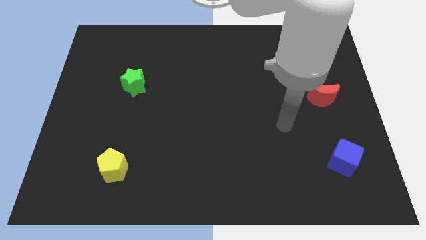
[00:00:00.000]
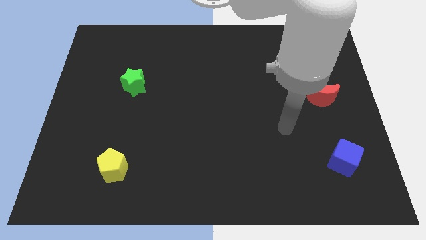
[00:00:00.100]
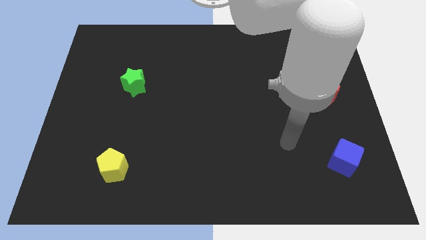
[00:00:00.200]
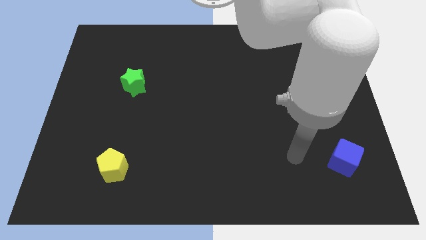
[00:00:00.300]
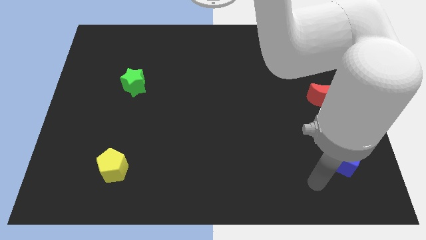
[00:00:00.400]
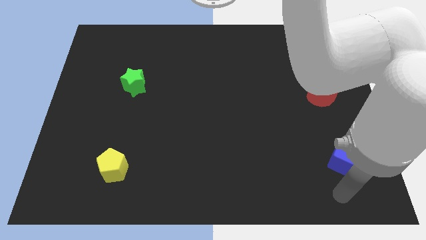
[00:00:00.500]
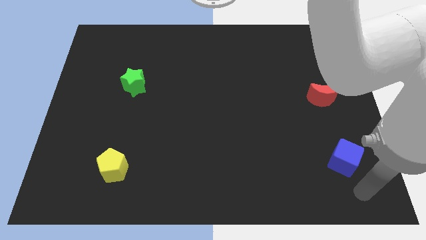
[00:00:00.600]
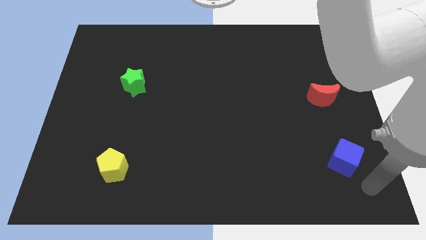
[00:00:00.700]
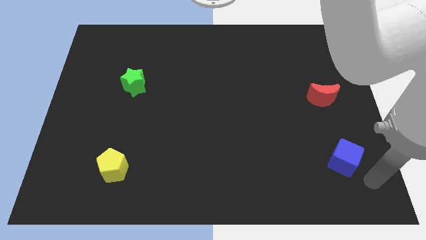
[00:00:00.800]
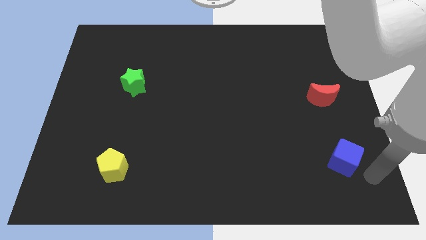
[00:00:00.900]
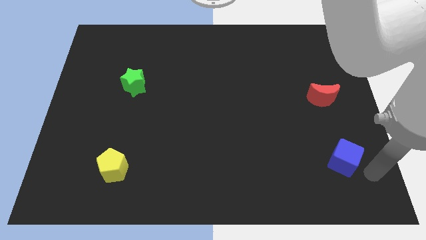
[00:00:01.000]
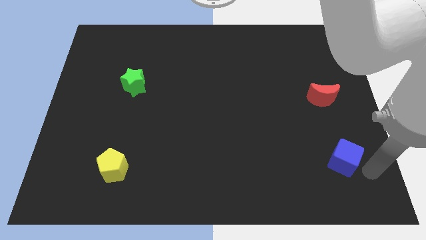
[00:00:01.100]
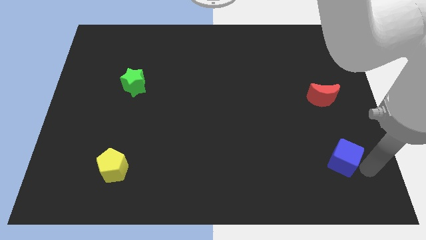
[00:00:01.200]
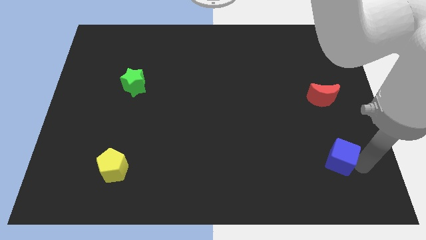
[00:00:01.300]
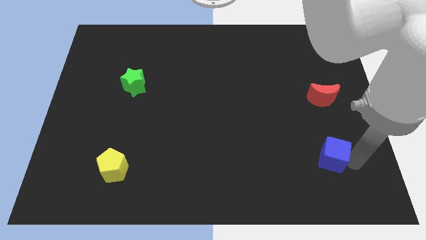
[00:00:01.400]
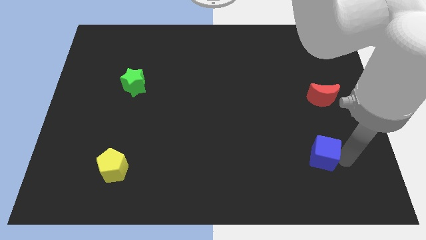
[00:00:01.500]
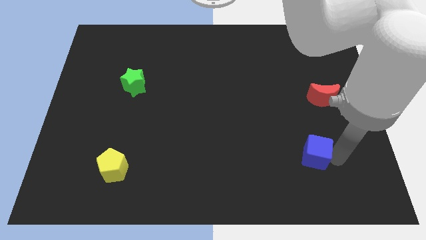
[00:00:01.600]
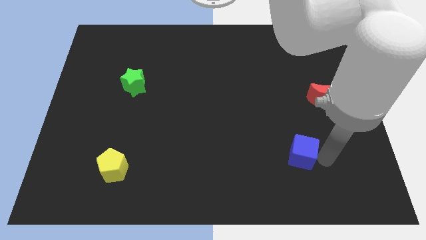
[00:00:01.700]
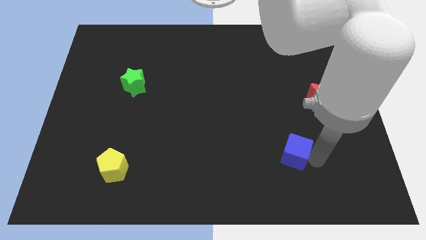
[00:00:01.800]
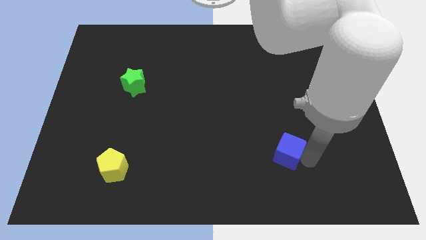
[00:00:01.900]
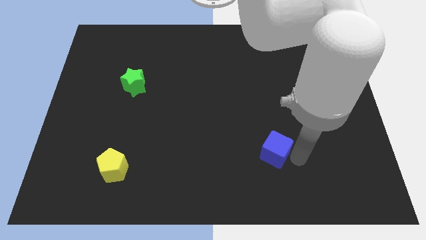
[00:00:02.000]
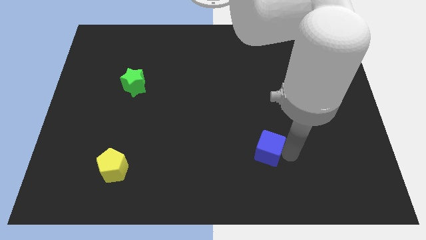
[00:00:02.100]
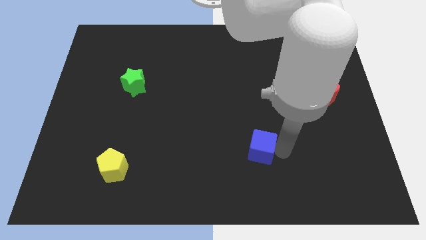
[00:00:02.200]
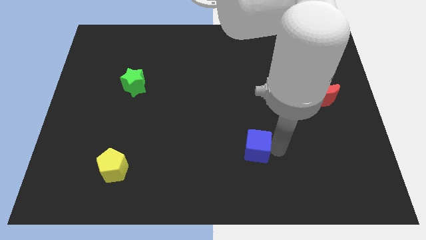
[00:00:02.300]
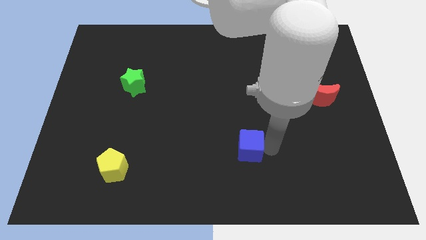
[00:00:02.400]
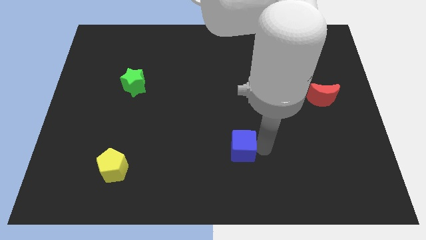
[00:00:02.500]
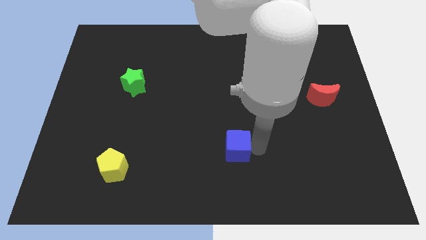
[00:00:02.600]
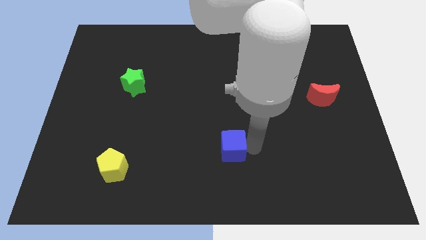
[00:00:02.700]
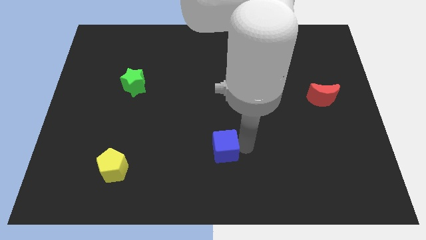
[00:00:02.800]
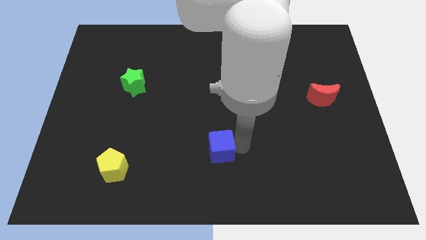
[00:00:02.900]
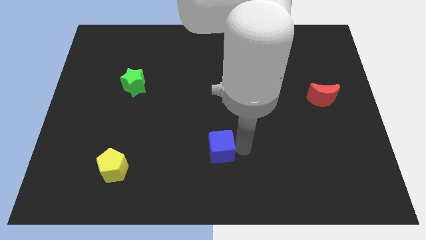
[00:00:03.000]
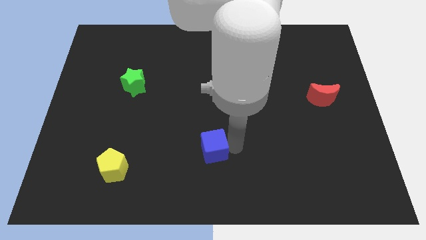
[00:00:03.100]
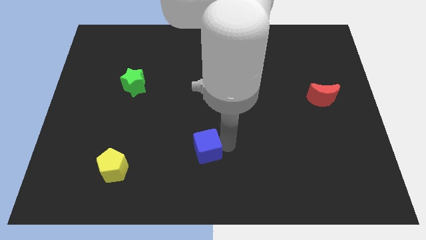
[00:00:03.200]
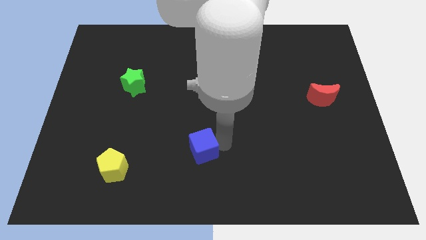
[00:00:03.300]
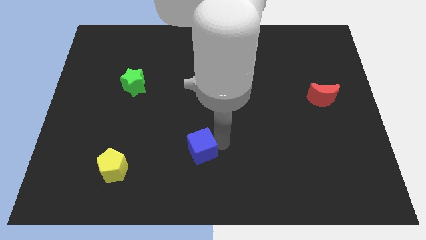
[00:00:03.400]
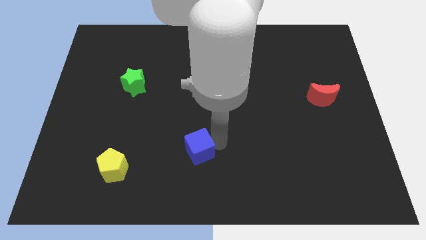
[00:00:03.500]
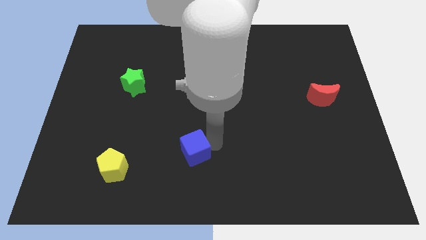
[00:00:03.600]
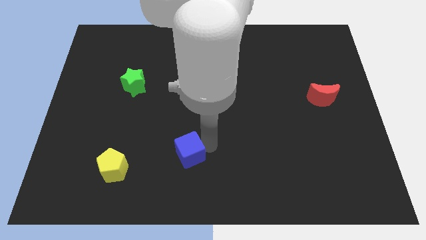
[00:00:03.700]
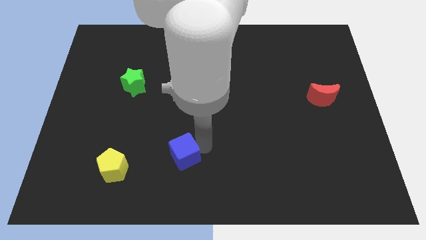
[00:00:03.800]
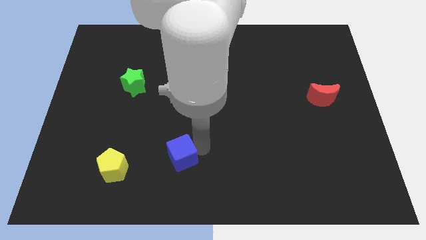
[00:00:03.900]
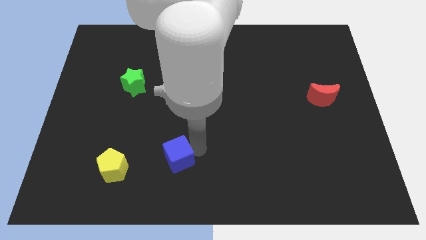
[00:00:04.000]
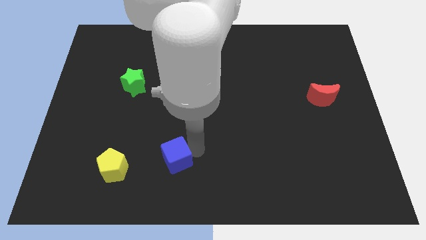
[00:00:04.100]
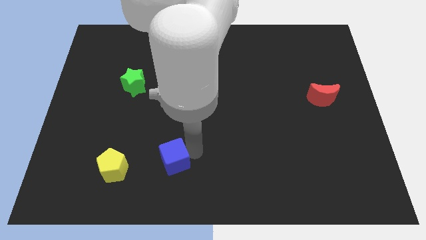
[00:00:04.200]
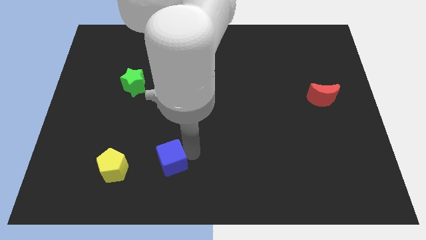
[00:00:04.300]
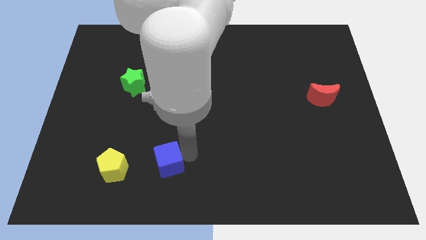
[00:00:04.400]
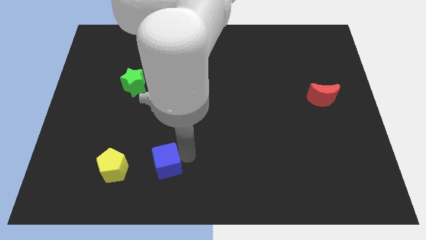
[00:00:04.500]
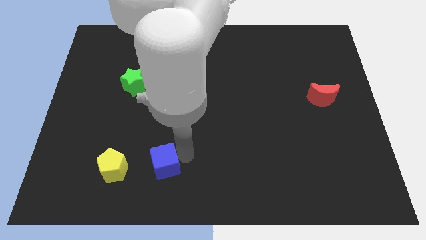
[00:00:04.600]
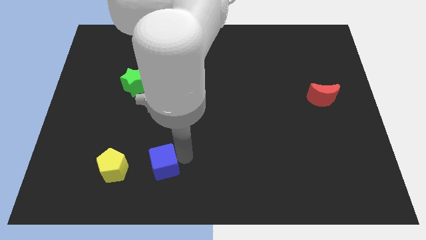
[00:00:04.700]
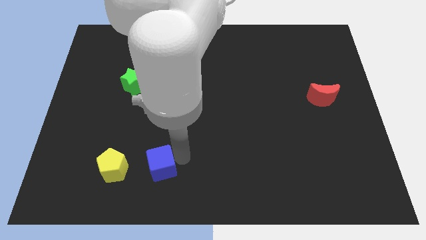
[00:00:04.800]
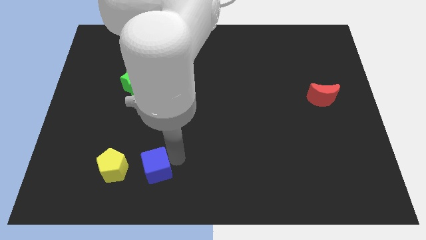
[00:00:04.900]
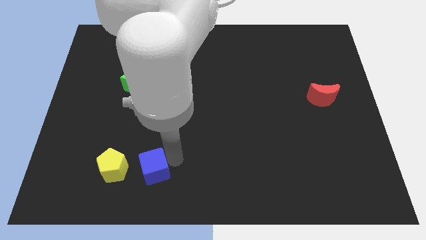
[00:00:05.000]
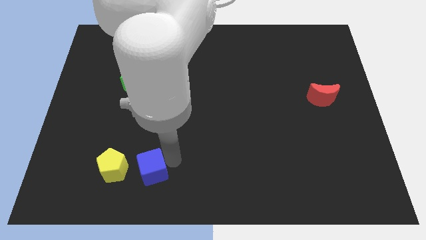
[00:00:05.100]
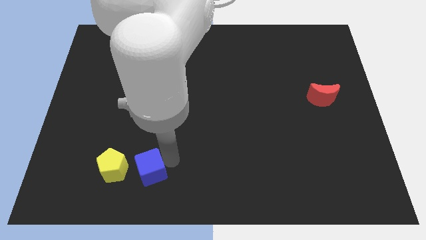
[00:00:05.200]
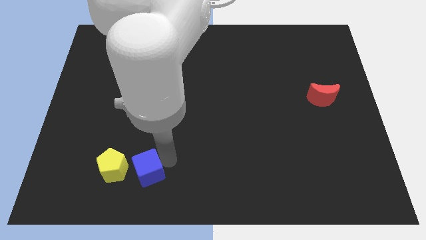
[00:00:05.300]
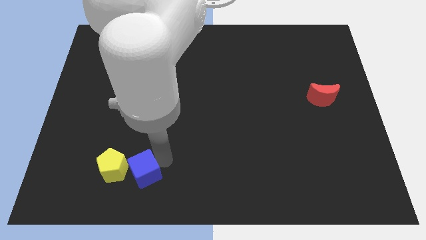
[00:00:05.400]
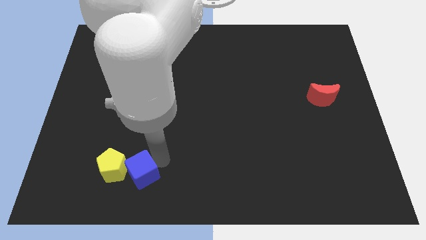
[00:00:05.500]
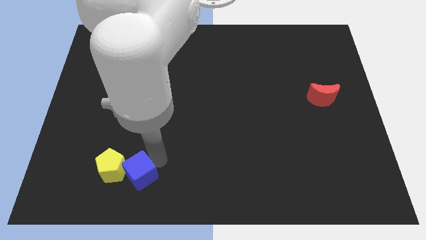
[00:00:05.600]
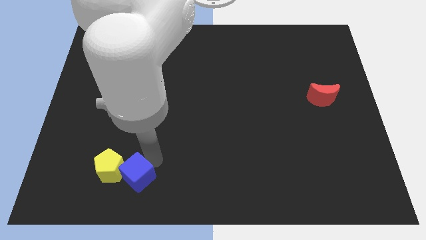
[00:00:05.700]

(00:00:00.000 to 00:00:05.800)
put the cube close to the yellow block

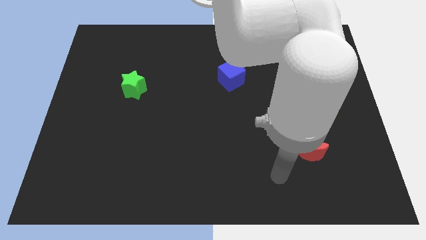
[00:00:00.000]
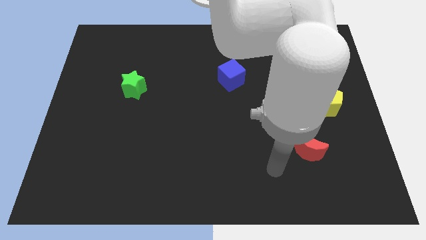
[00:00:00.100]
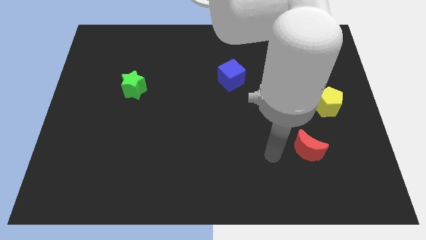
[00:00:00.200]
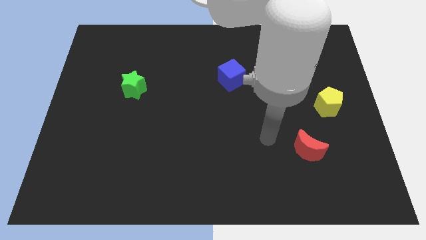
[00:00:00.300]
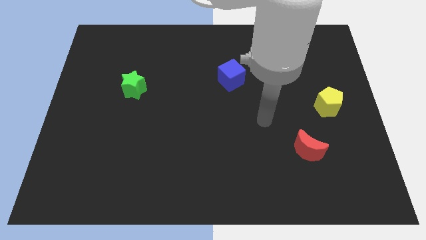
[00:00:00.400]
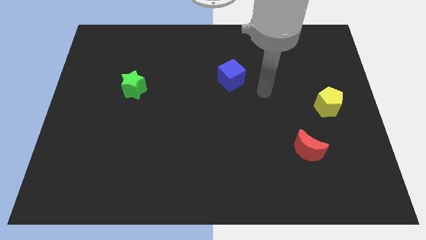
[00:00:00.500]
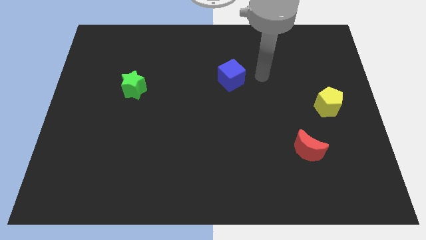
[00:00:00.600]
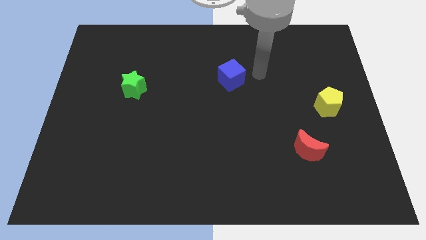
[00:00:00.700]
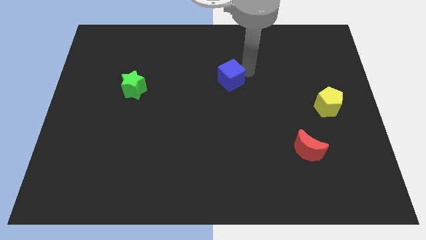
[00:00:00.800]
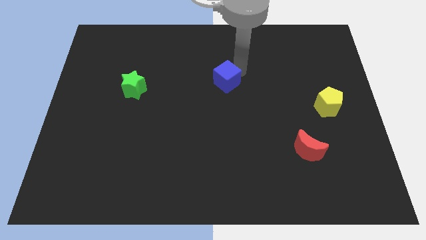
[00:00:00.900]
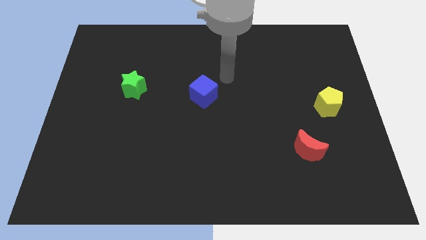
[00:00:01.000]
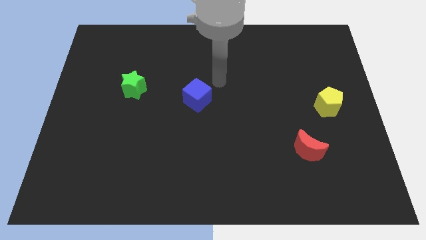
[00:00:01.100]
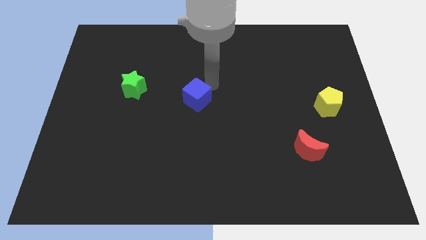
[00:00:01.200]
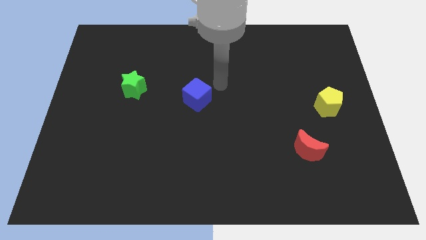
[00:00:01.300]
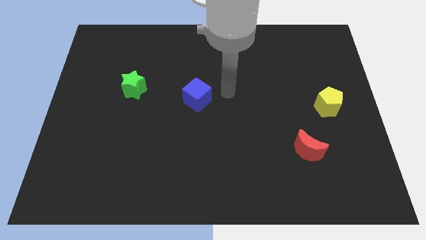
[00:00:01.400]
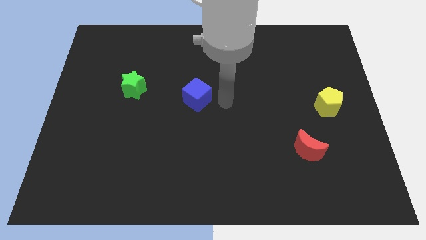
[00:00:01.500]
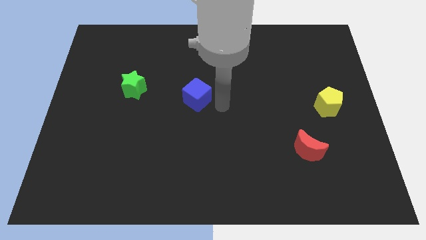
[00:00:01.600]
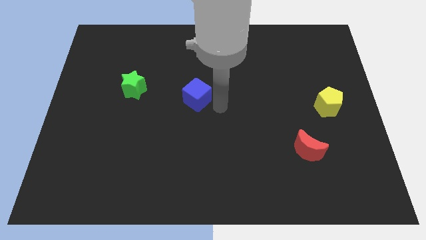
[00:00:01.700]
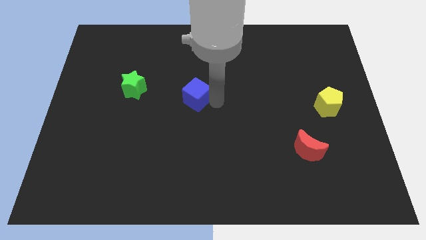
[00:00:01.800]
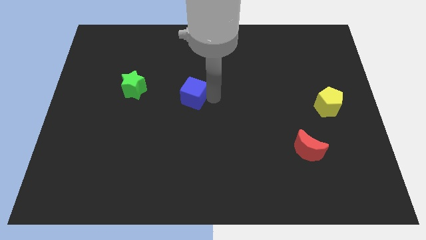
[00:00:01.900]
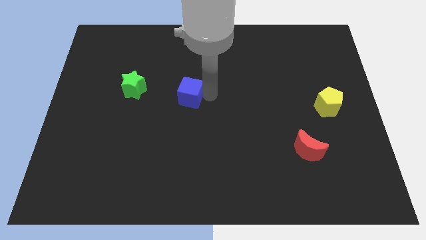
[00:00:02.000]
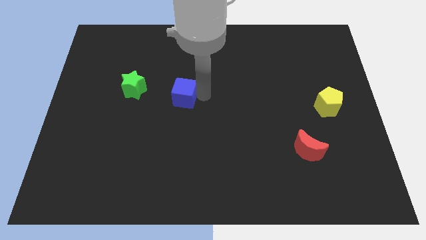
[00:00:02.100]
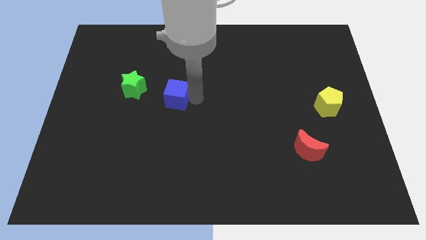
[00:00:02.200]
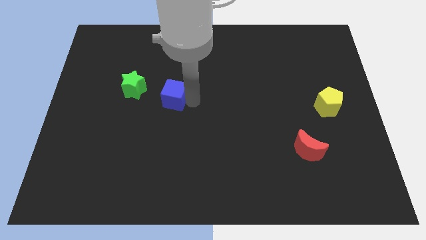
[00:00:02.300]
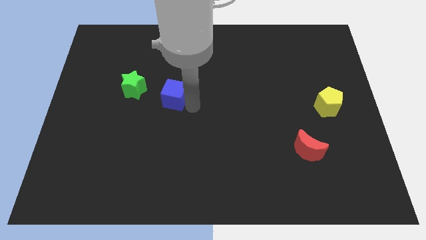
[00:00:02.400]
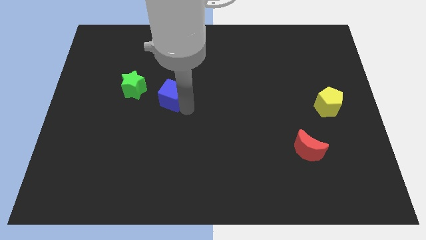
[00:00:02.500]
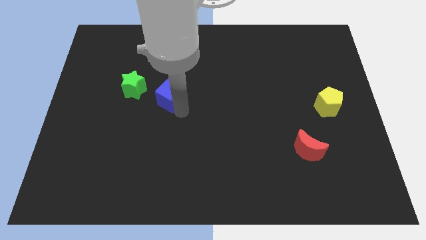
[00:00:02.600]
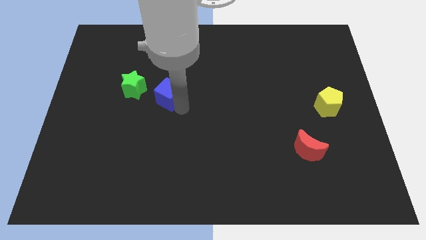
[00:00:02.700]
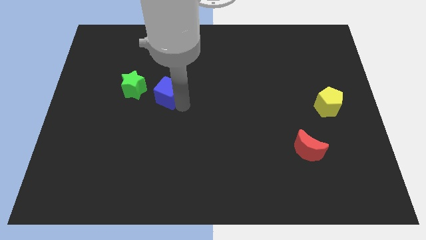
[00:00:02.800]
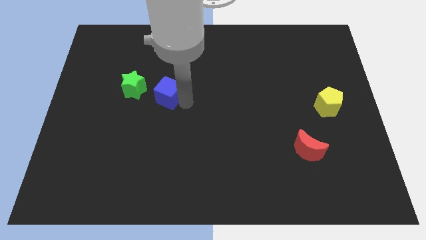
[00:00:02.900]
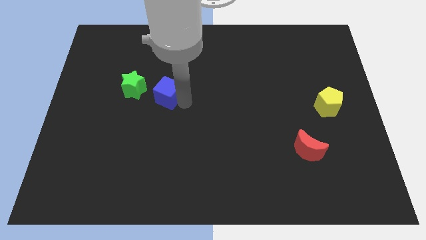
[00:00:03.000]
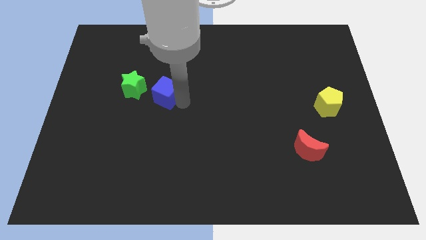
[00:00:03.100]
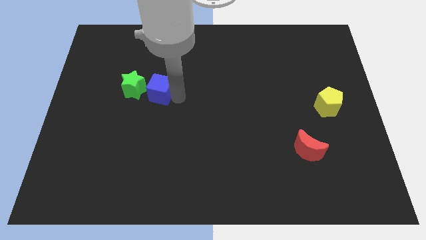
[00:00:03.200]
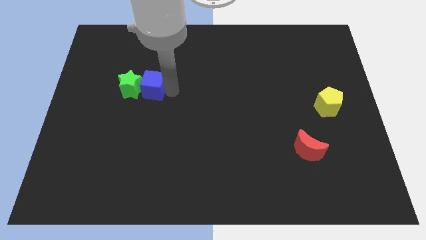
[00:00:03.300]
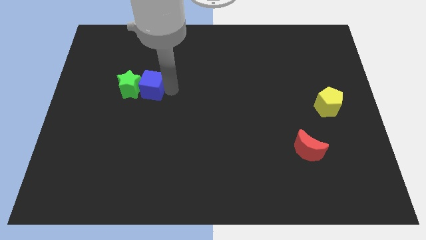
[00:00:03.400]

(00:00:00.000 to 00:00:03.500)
move the cube towards the star
